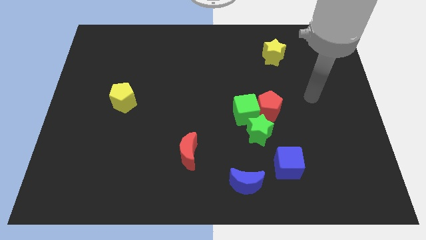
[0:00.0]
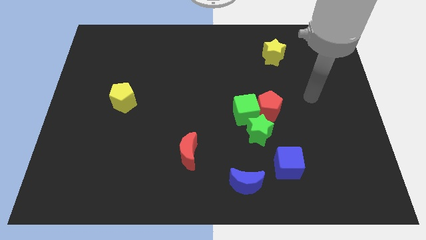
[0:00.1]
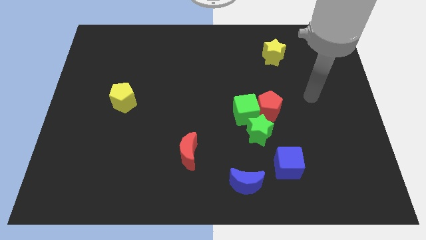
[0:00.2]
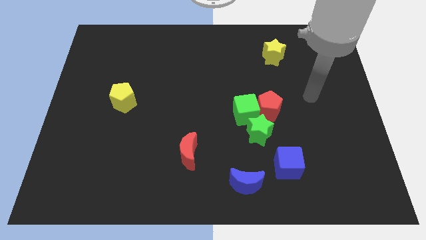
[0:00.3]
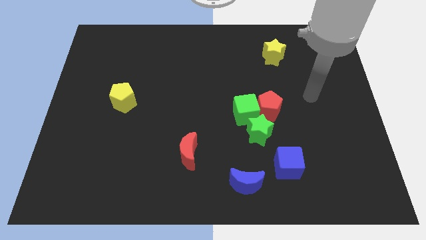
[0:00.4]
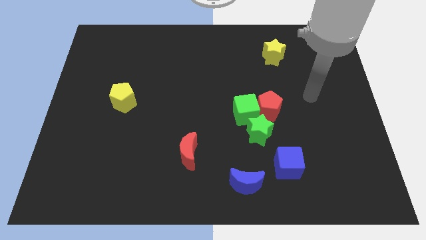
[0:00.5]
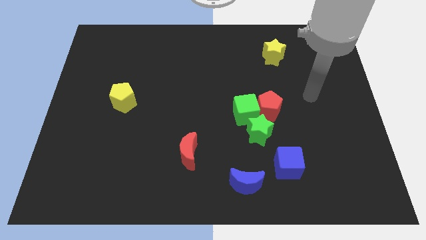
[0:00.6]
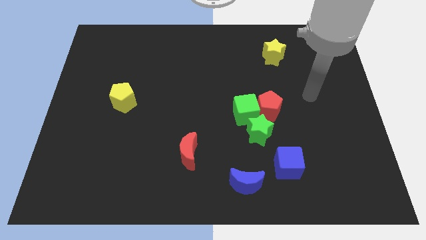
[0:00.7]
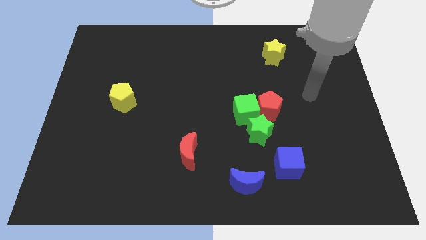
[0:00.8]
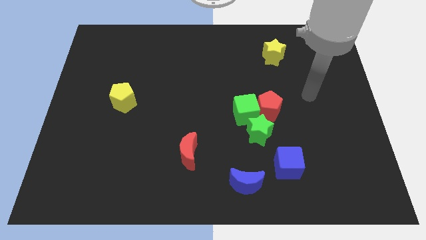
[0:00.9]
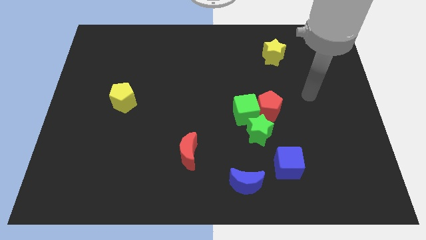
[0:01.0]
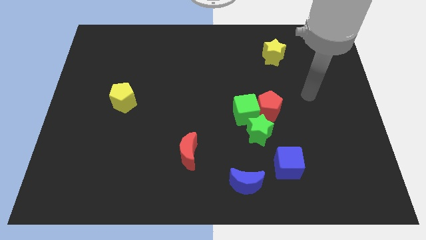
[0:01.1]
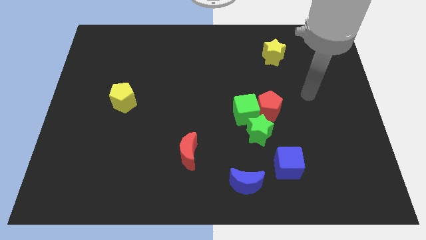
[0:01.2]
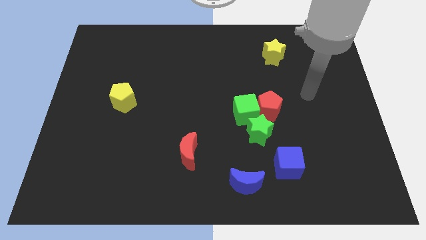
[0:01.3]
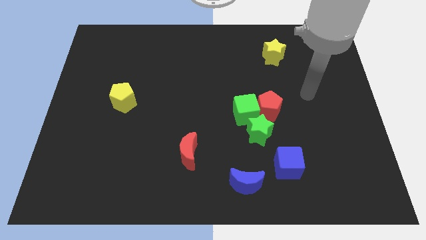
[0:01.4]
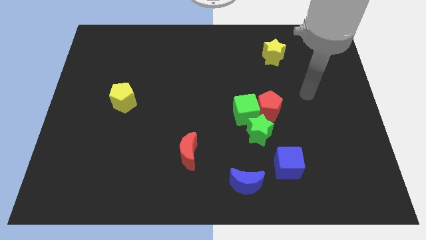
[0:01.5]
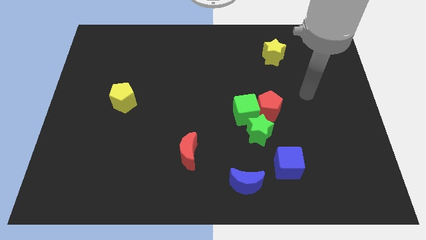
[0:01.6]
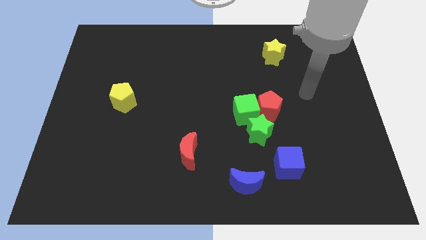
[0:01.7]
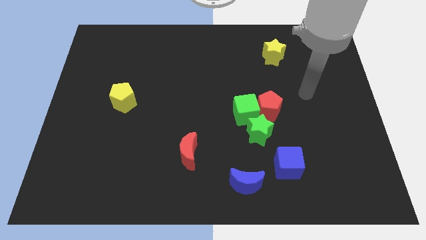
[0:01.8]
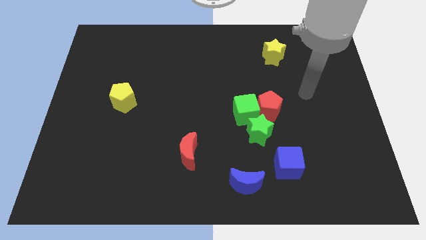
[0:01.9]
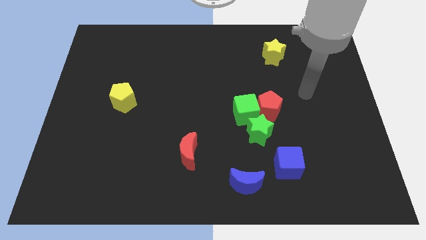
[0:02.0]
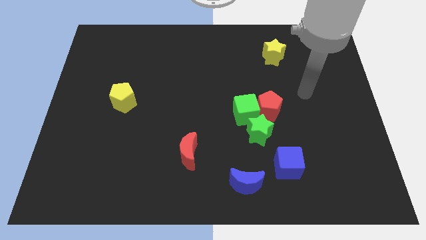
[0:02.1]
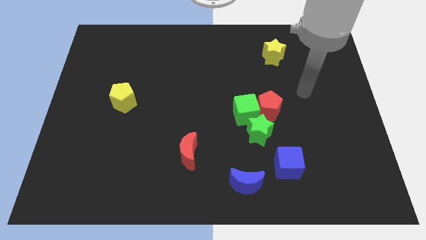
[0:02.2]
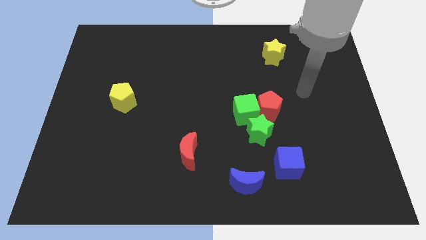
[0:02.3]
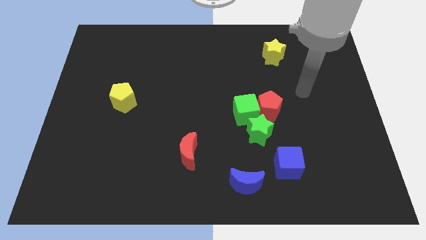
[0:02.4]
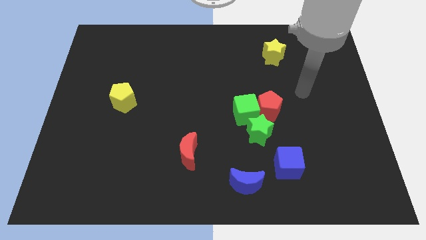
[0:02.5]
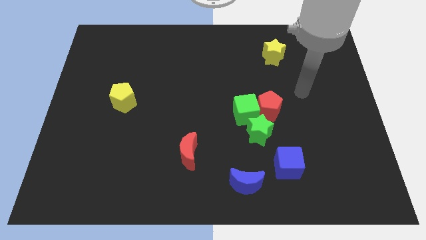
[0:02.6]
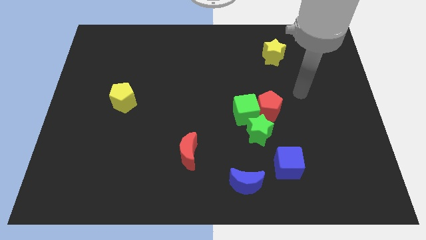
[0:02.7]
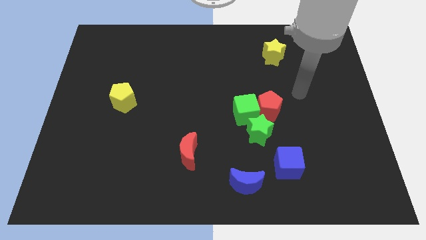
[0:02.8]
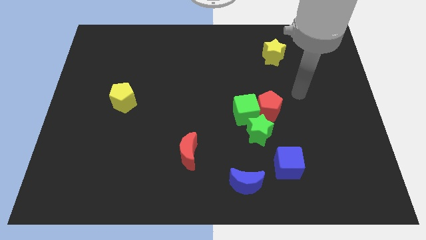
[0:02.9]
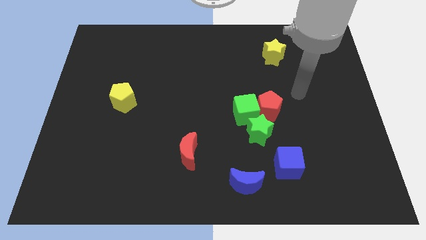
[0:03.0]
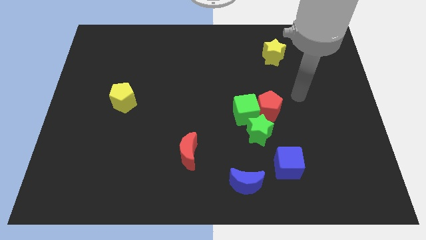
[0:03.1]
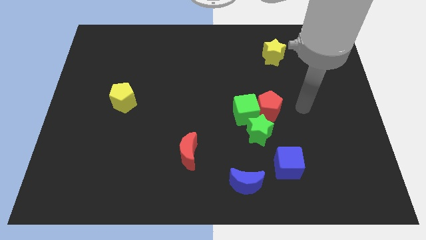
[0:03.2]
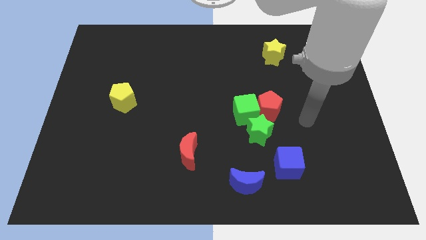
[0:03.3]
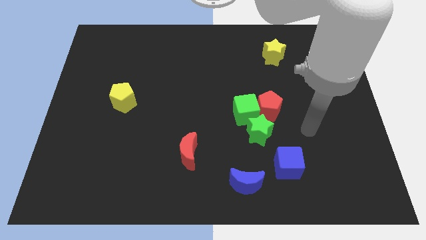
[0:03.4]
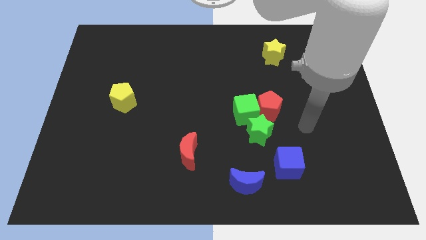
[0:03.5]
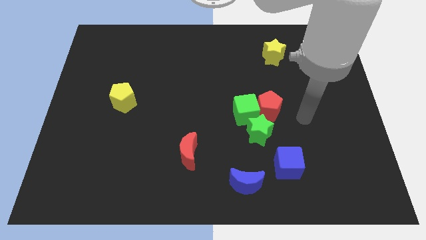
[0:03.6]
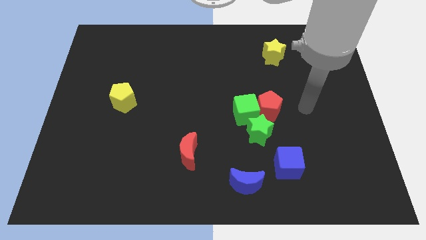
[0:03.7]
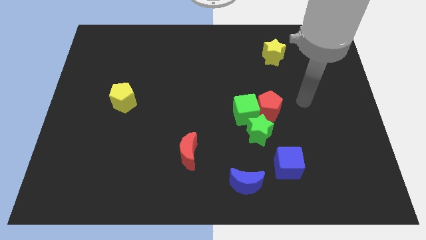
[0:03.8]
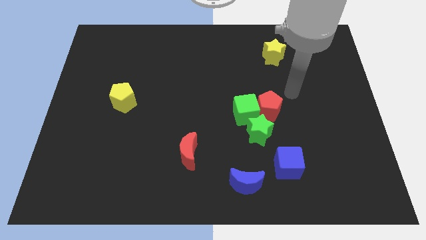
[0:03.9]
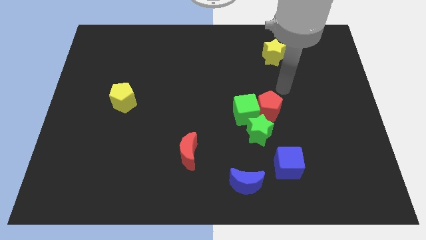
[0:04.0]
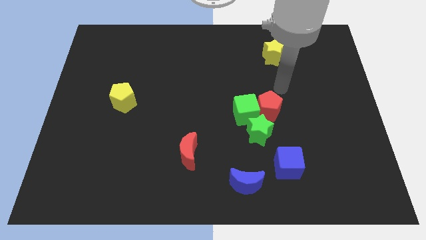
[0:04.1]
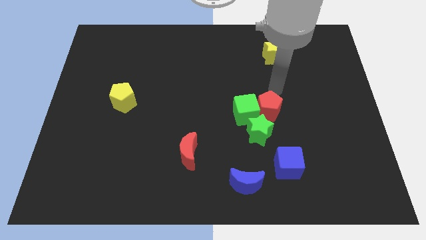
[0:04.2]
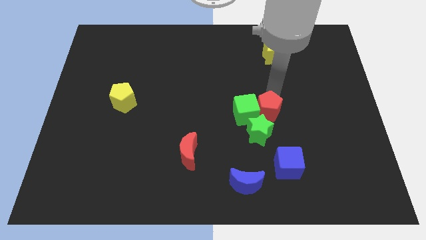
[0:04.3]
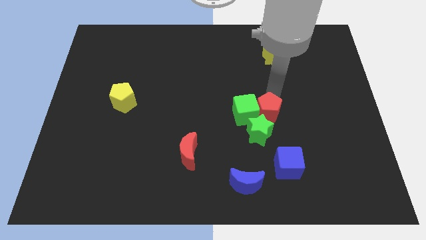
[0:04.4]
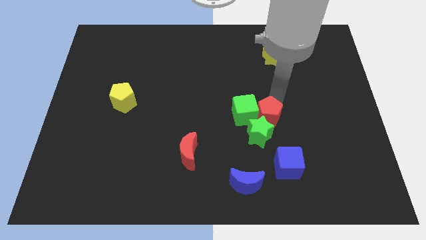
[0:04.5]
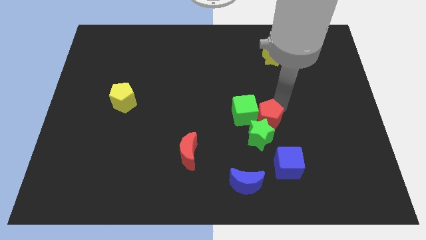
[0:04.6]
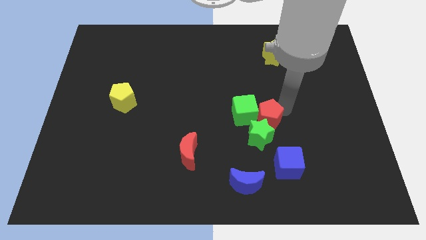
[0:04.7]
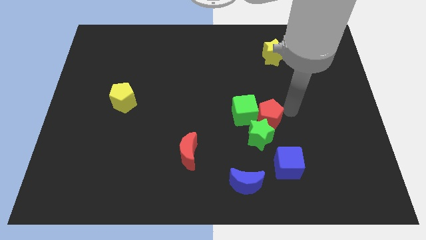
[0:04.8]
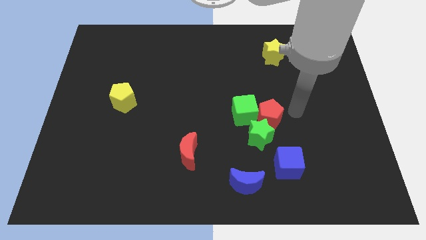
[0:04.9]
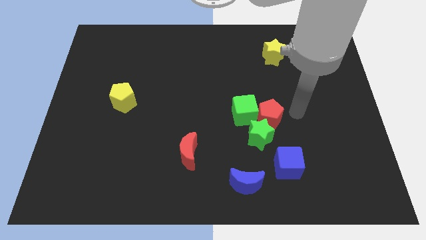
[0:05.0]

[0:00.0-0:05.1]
push the red pentagon into the green cube and the green star

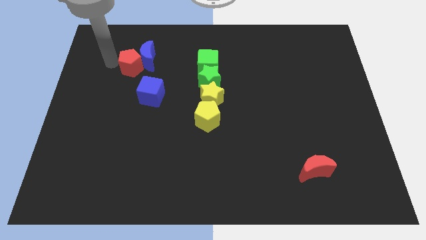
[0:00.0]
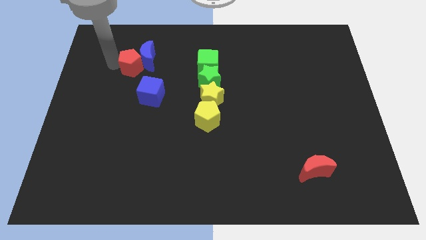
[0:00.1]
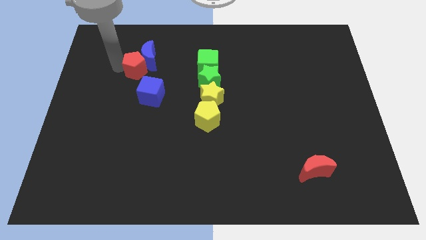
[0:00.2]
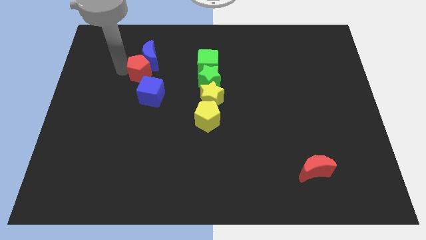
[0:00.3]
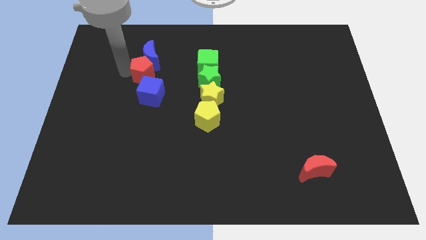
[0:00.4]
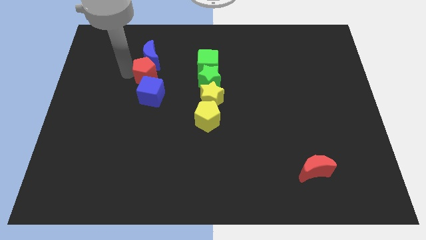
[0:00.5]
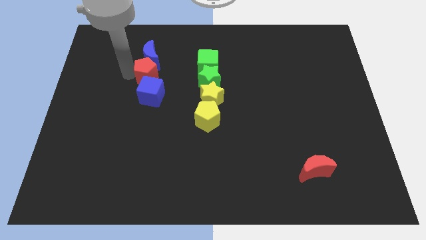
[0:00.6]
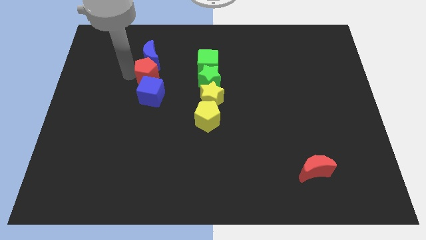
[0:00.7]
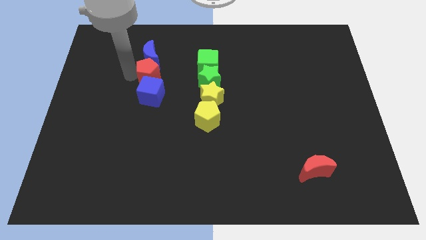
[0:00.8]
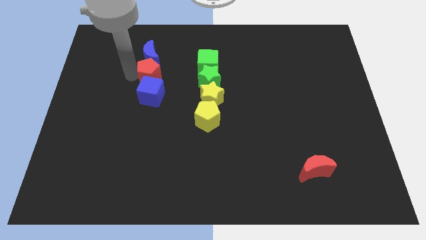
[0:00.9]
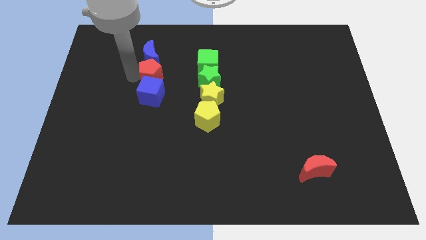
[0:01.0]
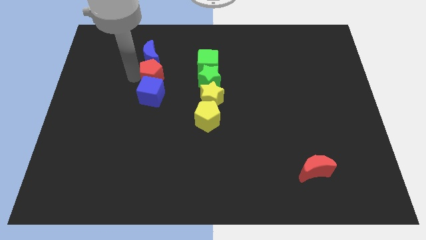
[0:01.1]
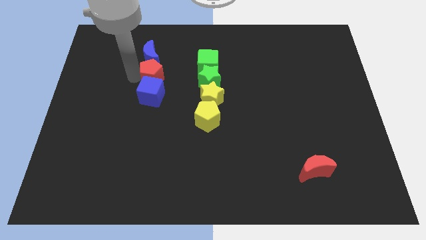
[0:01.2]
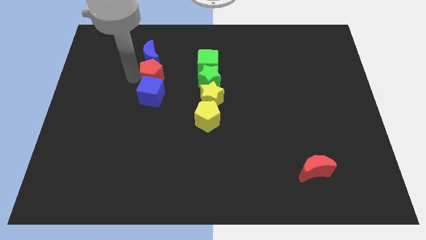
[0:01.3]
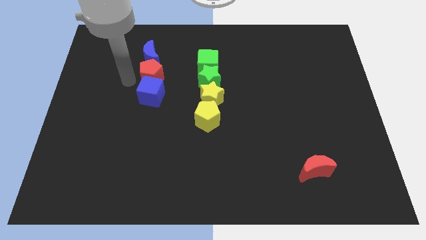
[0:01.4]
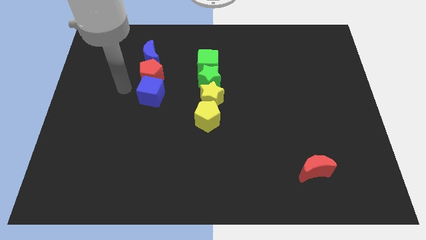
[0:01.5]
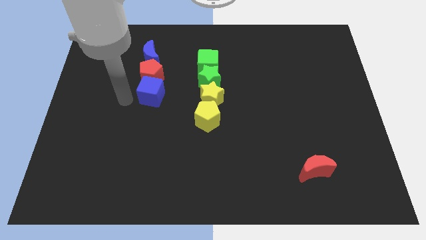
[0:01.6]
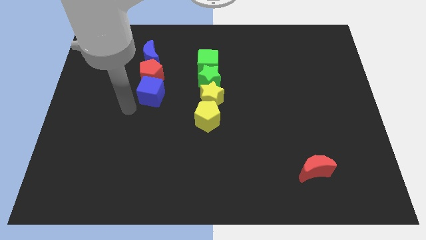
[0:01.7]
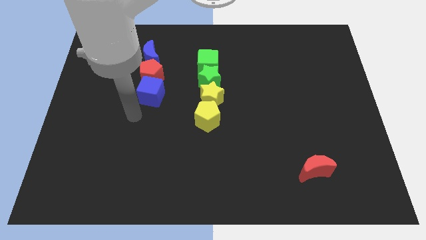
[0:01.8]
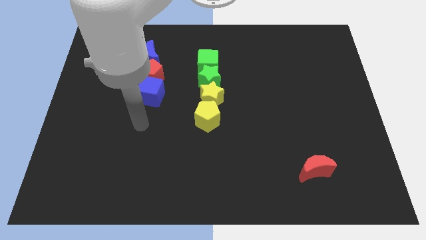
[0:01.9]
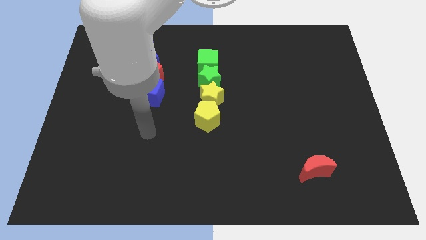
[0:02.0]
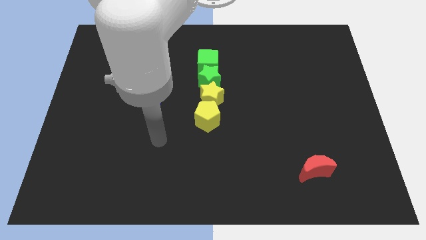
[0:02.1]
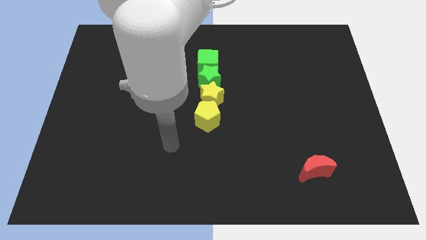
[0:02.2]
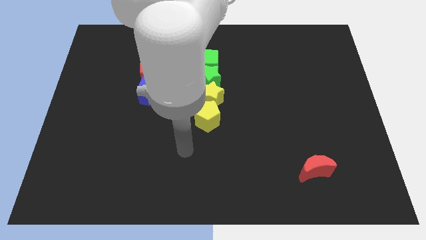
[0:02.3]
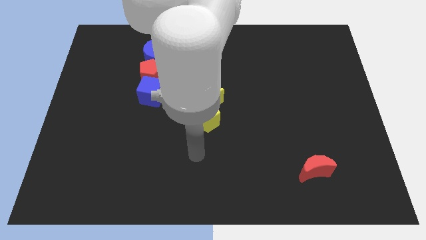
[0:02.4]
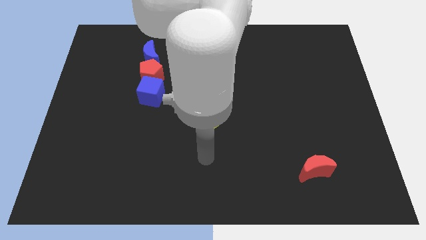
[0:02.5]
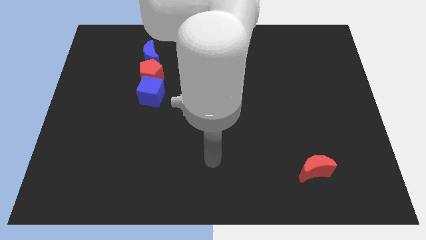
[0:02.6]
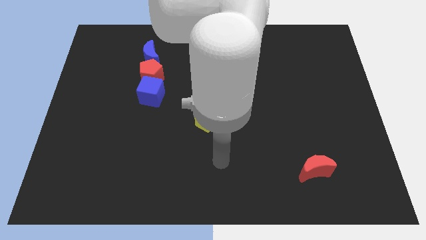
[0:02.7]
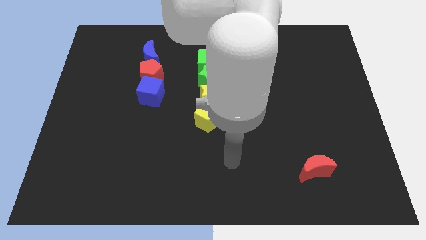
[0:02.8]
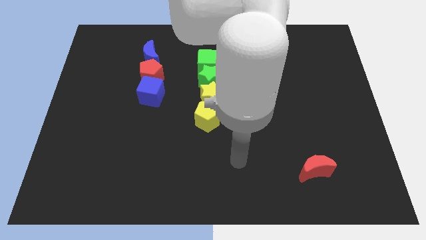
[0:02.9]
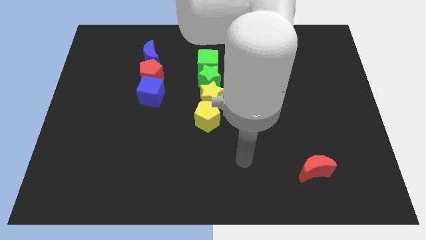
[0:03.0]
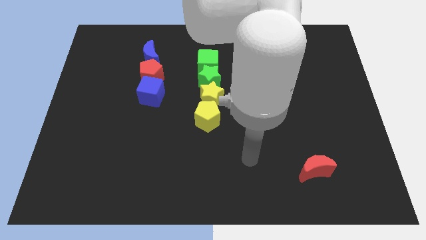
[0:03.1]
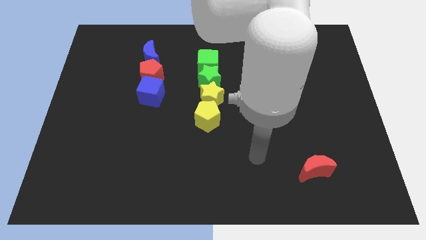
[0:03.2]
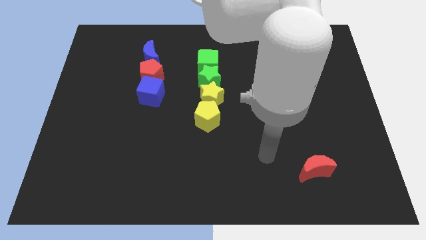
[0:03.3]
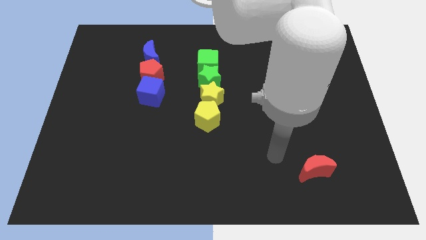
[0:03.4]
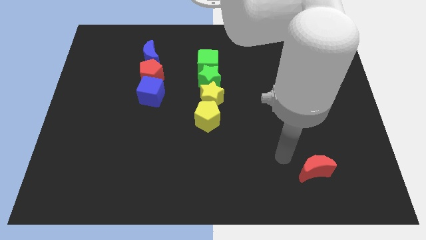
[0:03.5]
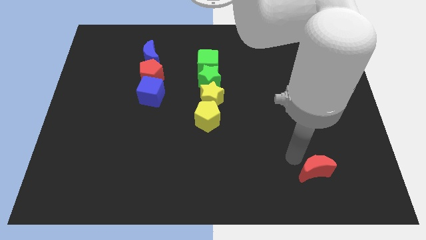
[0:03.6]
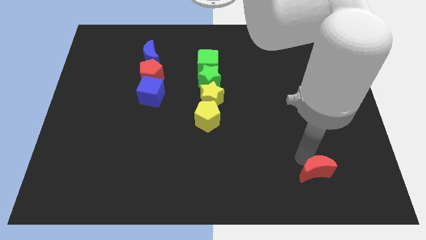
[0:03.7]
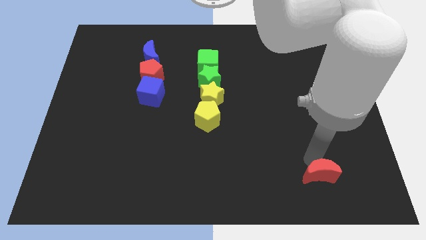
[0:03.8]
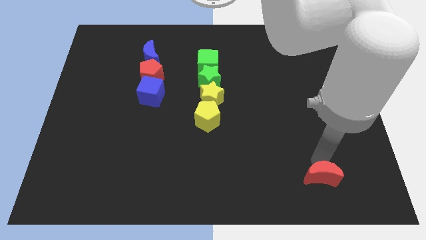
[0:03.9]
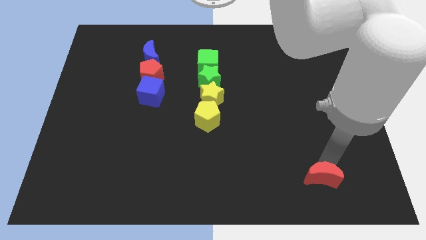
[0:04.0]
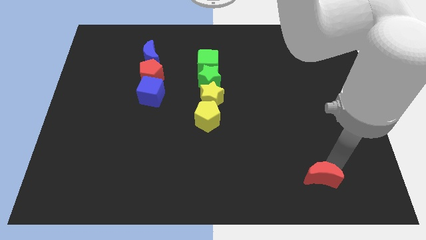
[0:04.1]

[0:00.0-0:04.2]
place the red pentagon in between the blue blocks
